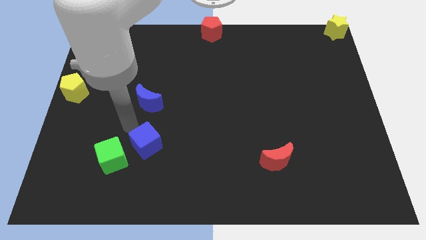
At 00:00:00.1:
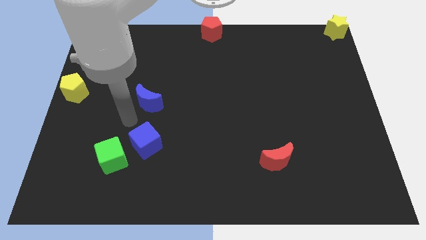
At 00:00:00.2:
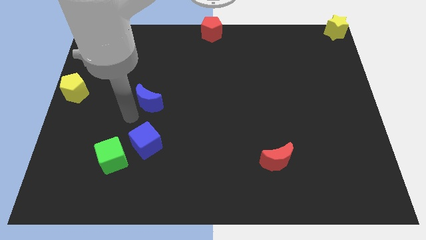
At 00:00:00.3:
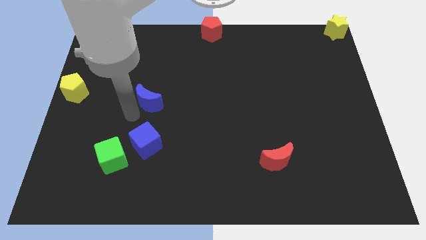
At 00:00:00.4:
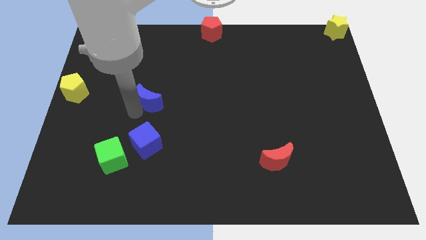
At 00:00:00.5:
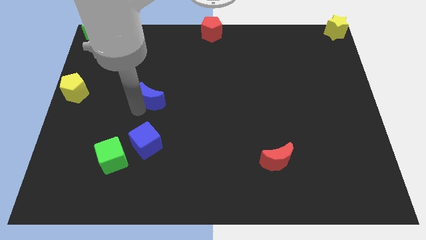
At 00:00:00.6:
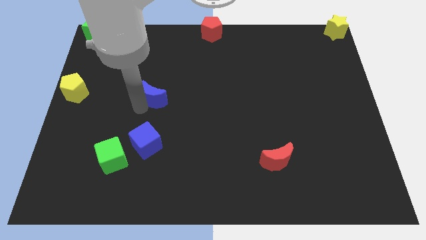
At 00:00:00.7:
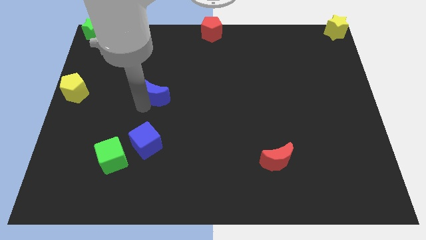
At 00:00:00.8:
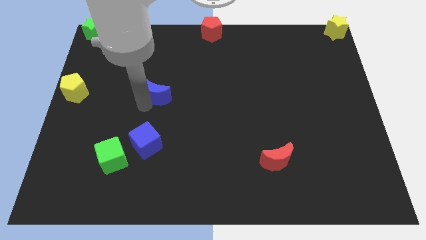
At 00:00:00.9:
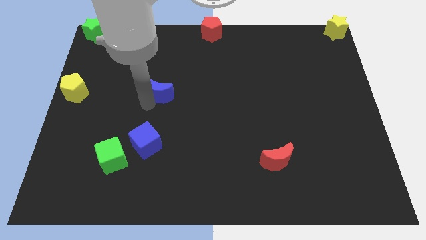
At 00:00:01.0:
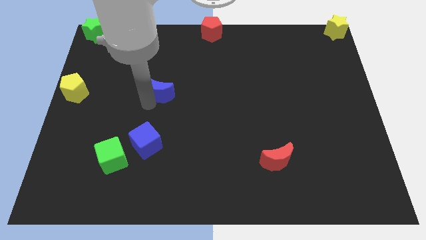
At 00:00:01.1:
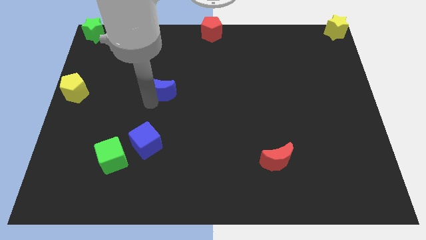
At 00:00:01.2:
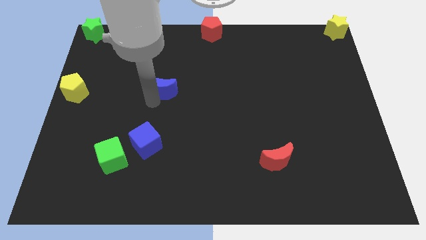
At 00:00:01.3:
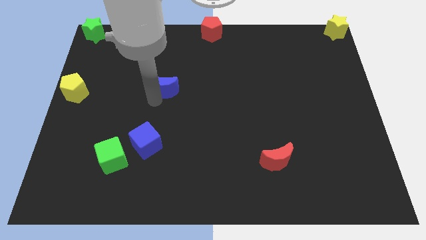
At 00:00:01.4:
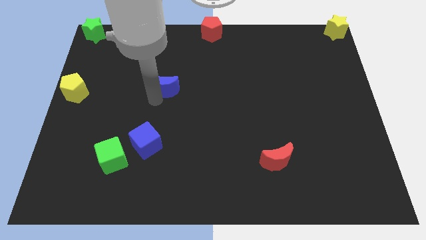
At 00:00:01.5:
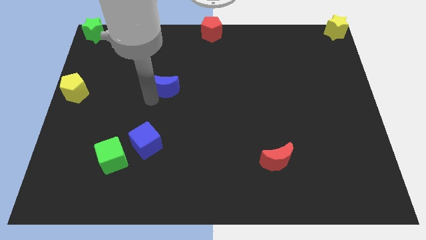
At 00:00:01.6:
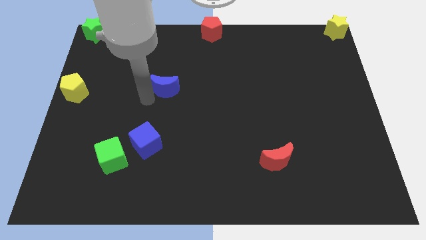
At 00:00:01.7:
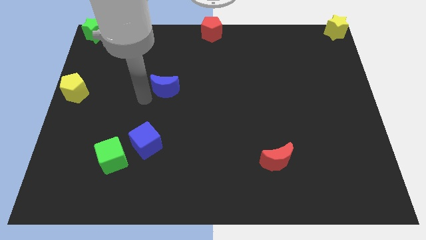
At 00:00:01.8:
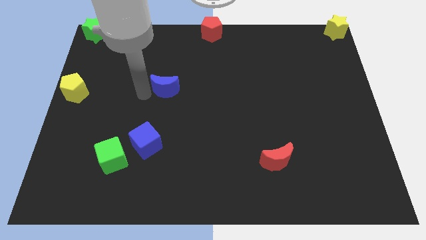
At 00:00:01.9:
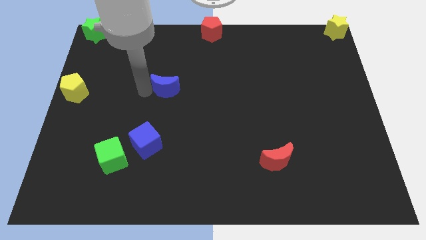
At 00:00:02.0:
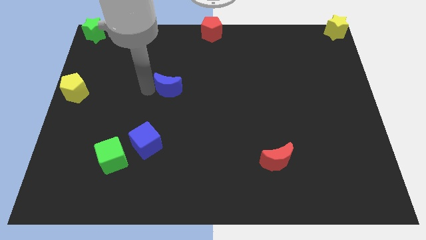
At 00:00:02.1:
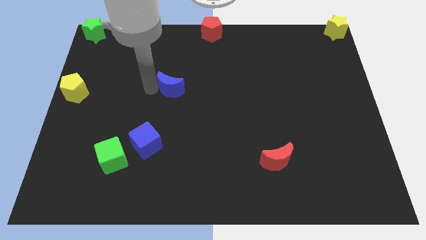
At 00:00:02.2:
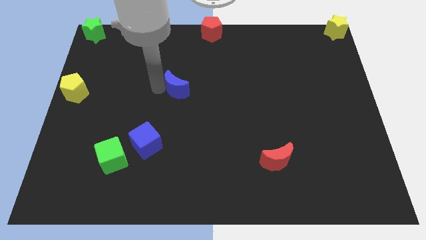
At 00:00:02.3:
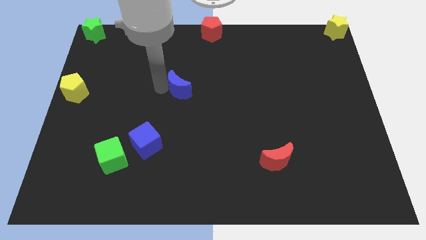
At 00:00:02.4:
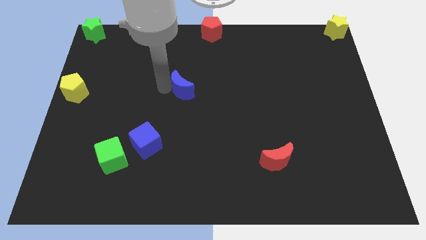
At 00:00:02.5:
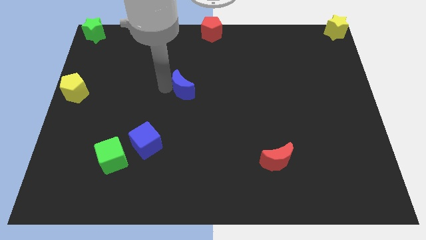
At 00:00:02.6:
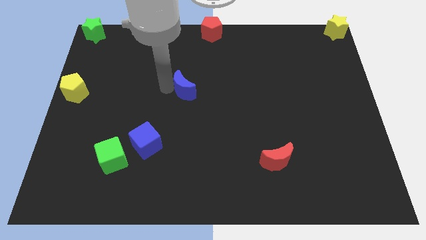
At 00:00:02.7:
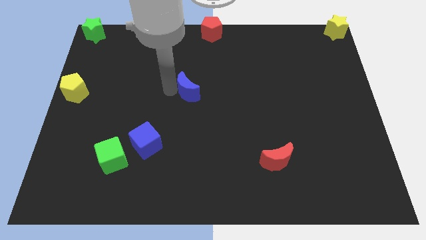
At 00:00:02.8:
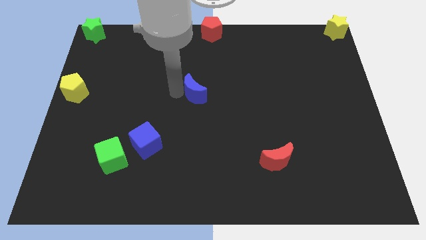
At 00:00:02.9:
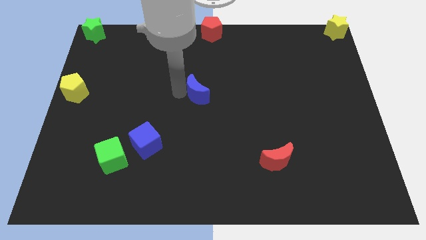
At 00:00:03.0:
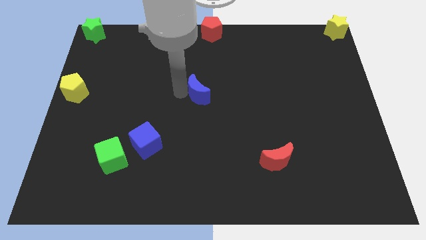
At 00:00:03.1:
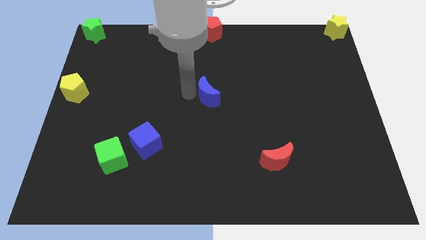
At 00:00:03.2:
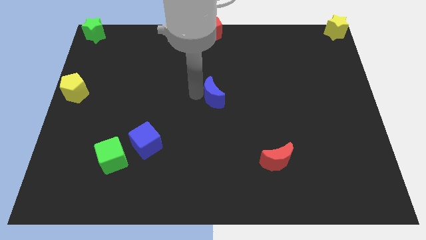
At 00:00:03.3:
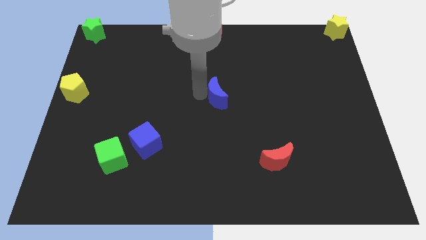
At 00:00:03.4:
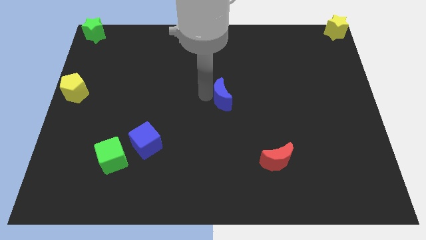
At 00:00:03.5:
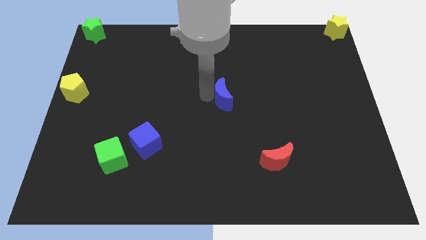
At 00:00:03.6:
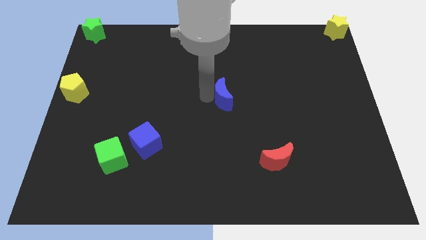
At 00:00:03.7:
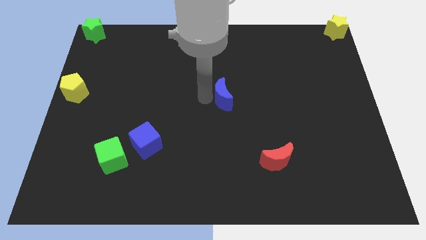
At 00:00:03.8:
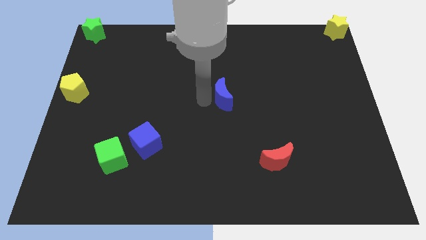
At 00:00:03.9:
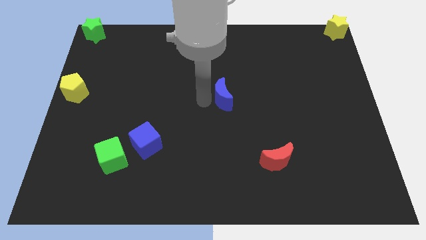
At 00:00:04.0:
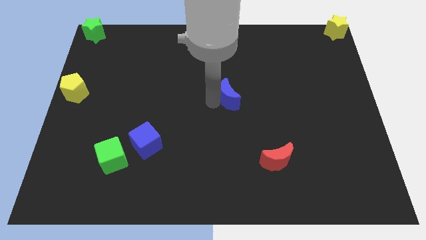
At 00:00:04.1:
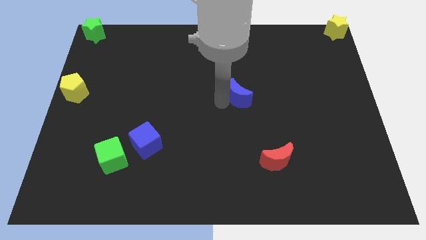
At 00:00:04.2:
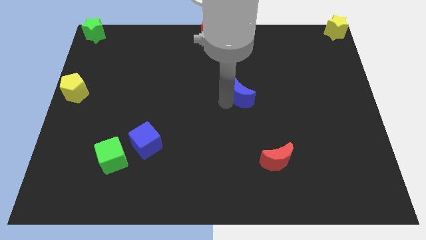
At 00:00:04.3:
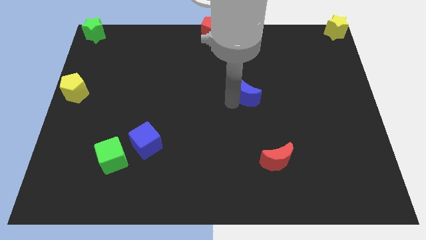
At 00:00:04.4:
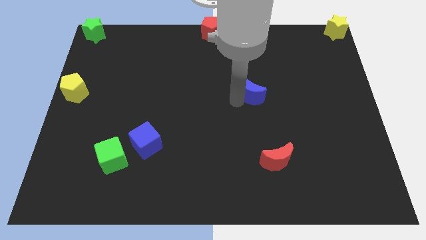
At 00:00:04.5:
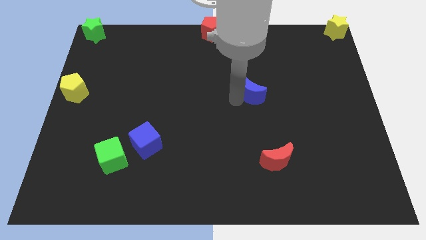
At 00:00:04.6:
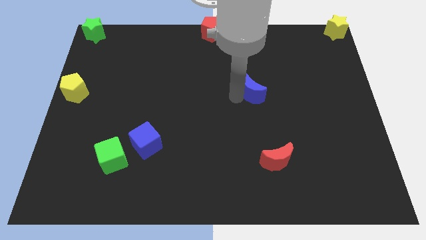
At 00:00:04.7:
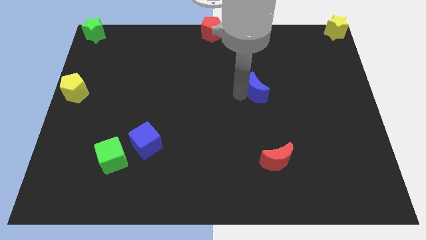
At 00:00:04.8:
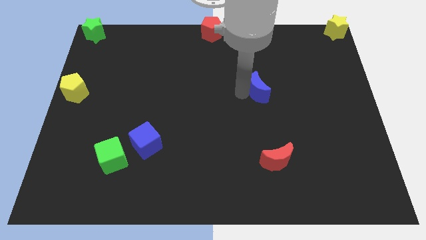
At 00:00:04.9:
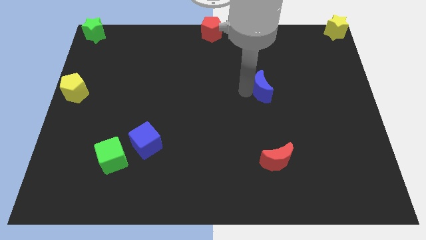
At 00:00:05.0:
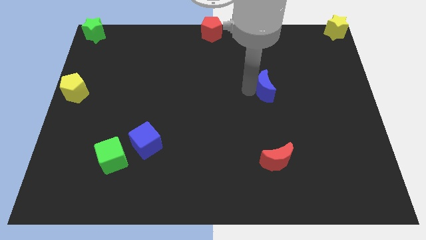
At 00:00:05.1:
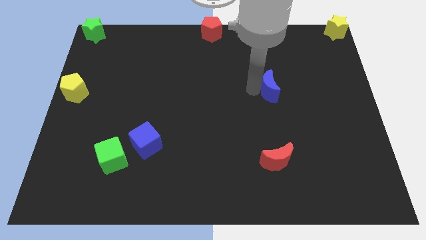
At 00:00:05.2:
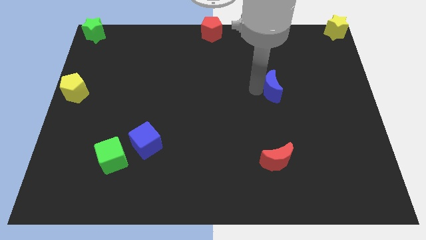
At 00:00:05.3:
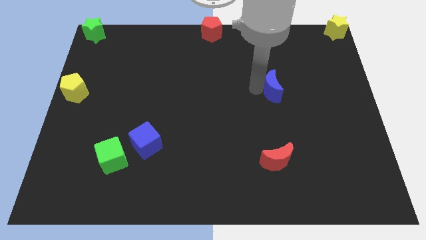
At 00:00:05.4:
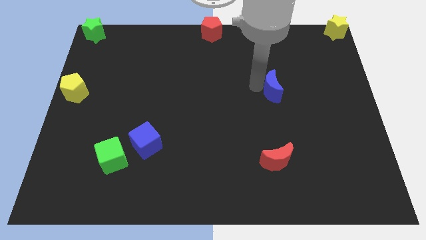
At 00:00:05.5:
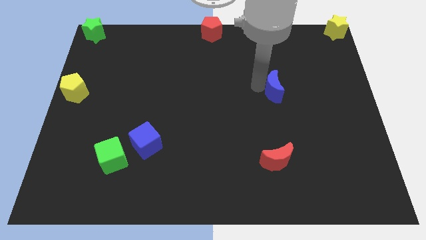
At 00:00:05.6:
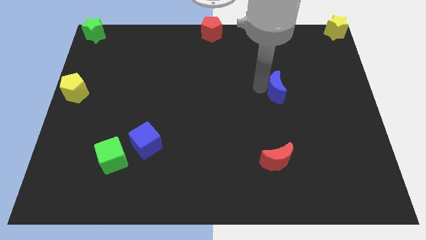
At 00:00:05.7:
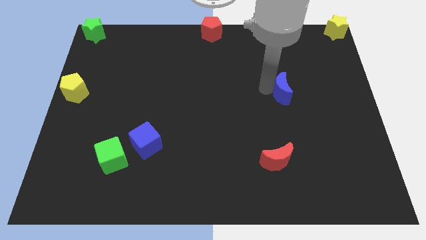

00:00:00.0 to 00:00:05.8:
move the blue moon vertically above the red moon

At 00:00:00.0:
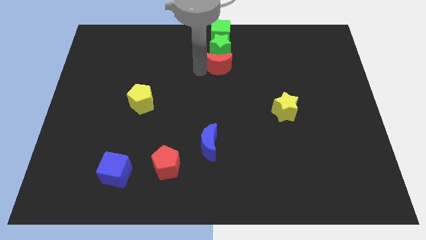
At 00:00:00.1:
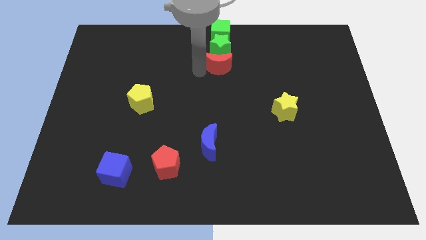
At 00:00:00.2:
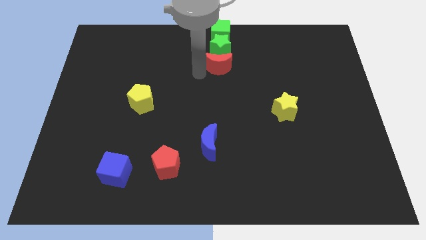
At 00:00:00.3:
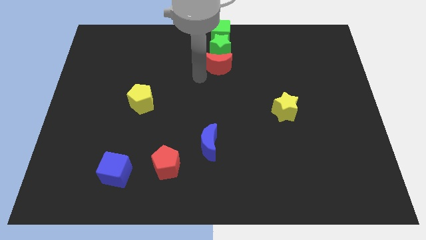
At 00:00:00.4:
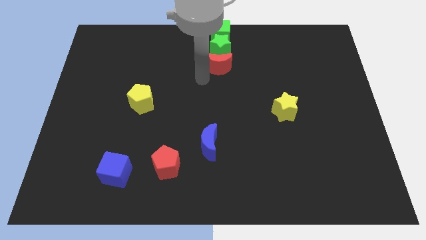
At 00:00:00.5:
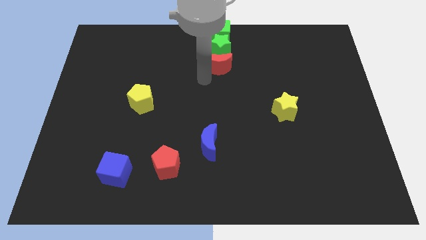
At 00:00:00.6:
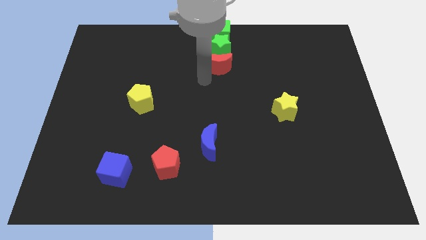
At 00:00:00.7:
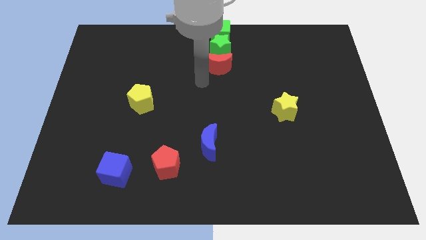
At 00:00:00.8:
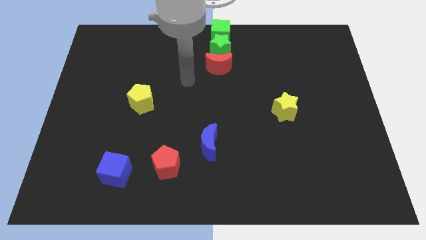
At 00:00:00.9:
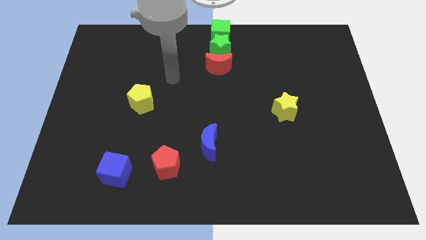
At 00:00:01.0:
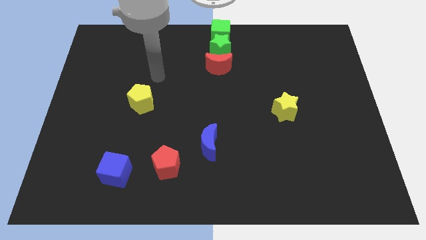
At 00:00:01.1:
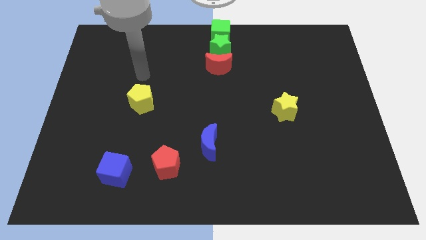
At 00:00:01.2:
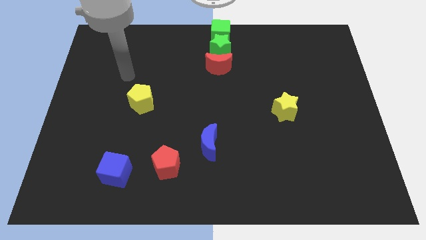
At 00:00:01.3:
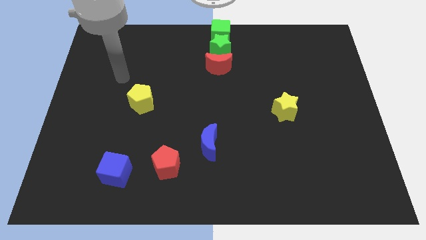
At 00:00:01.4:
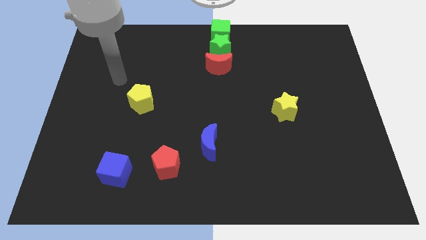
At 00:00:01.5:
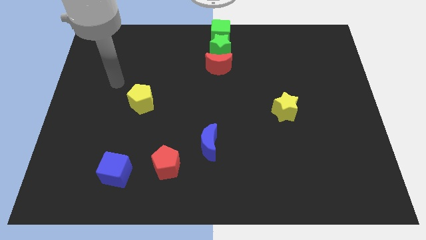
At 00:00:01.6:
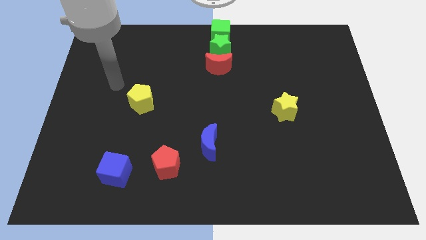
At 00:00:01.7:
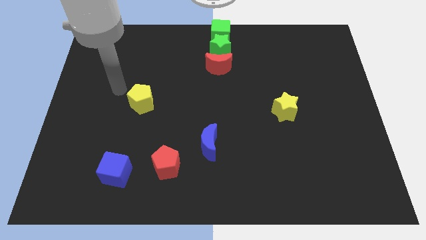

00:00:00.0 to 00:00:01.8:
point the arm to the left of the yellow pentagon

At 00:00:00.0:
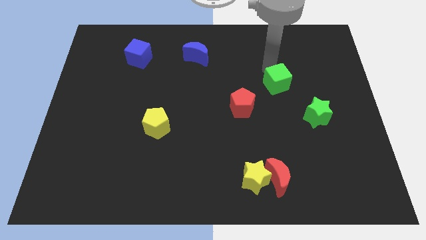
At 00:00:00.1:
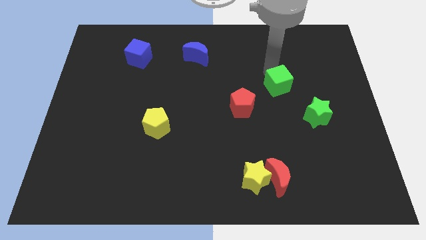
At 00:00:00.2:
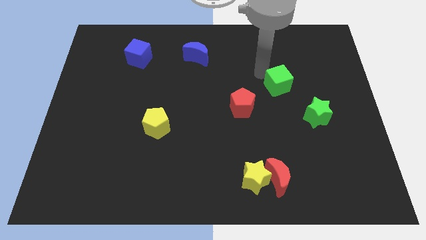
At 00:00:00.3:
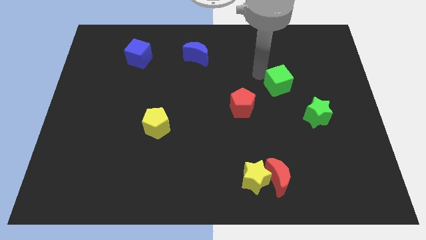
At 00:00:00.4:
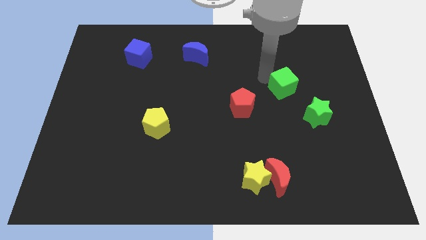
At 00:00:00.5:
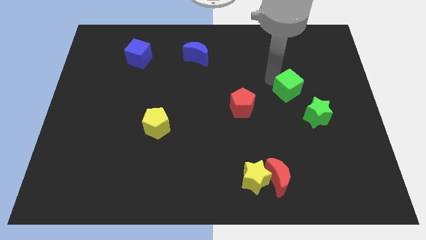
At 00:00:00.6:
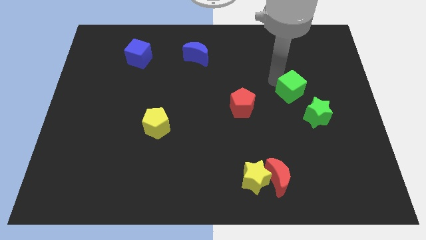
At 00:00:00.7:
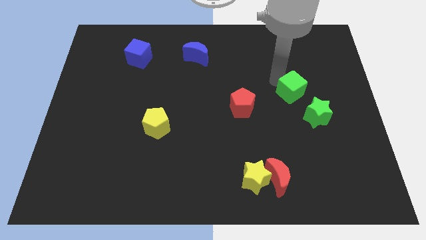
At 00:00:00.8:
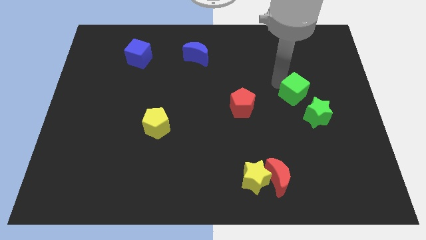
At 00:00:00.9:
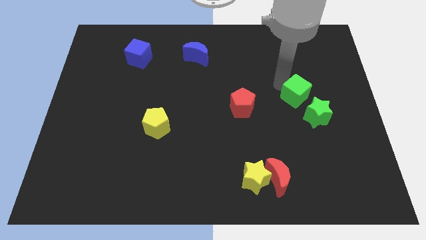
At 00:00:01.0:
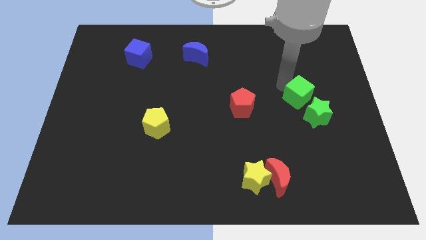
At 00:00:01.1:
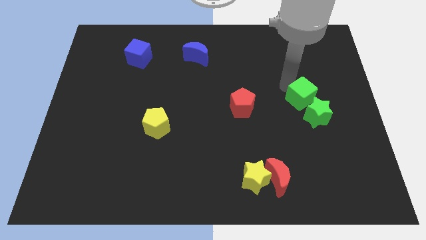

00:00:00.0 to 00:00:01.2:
move green cube towards green star
